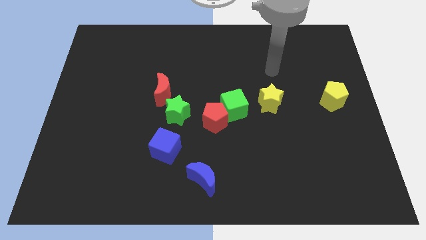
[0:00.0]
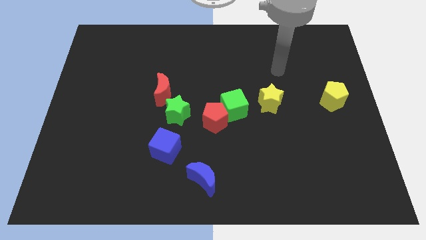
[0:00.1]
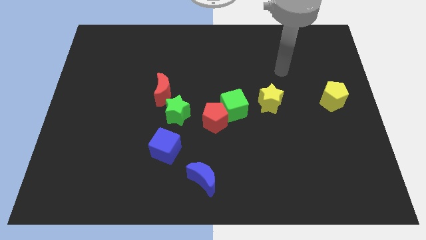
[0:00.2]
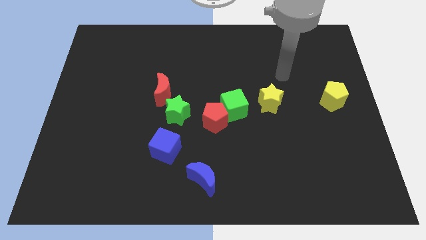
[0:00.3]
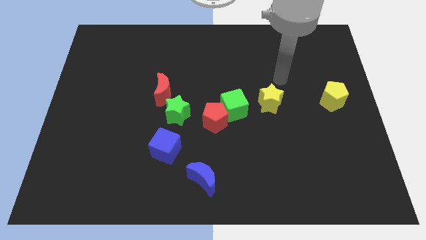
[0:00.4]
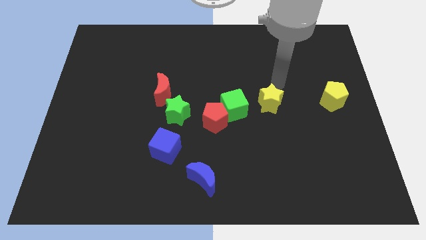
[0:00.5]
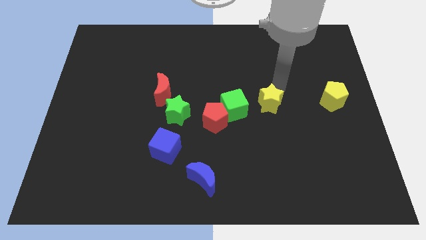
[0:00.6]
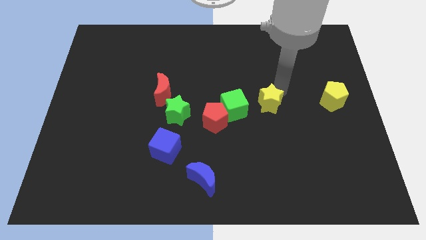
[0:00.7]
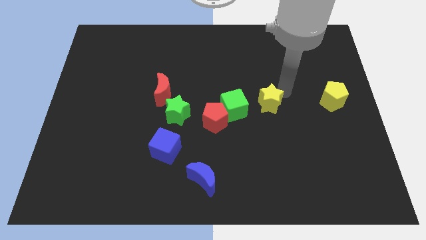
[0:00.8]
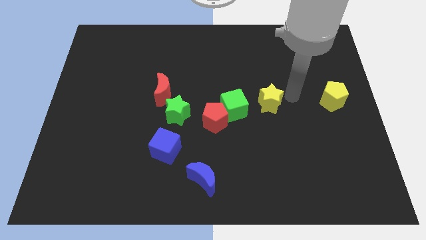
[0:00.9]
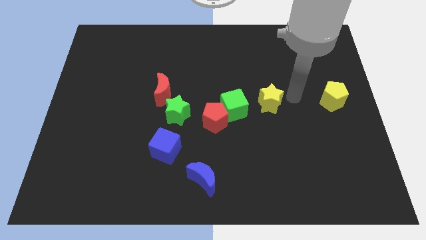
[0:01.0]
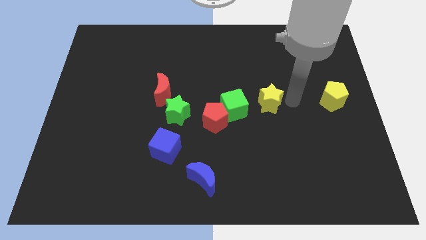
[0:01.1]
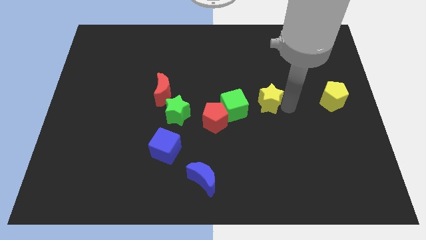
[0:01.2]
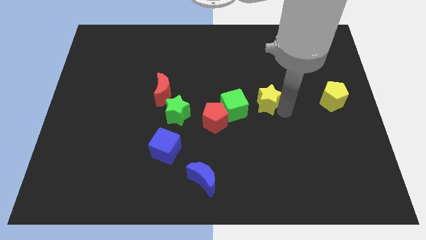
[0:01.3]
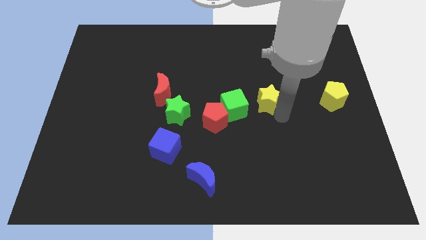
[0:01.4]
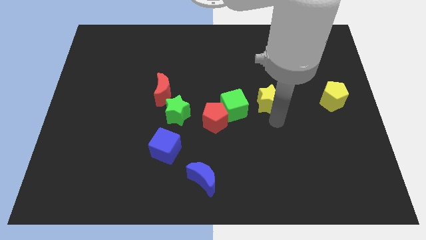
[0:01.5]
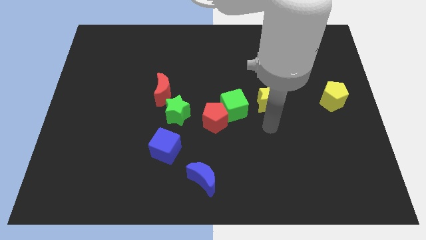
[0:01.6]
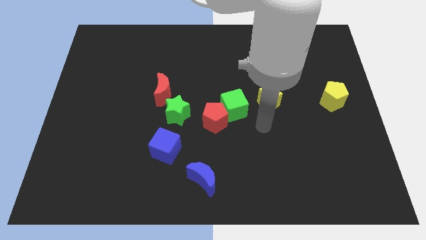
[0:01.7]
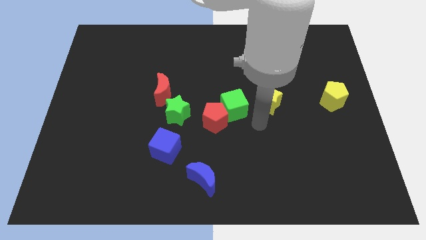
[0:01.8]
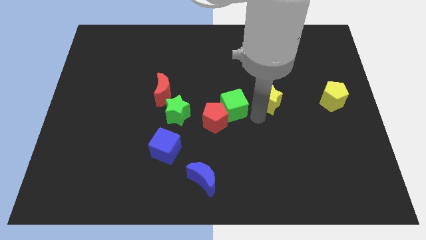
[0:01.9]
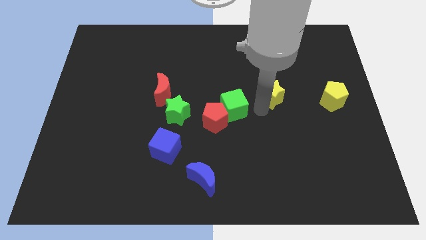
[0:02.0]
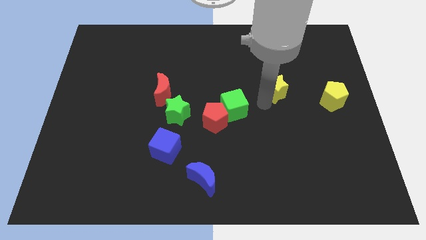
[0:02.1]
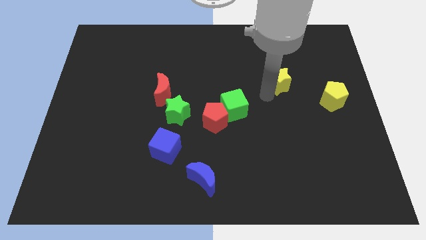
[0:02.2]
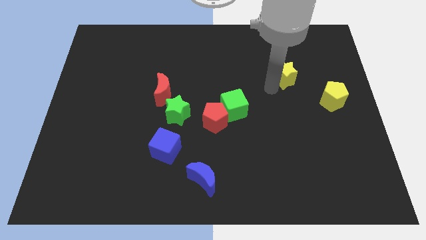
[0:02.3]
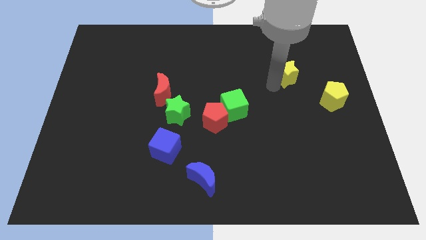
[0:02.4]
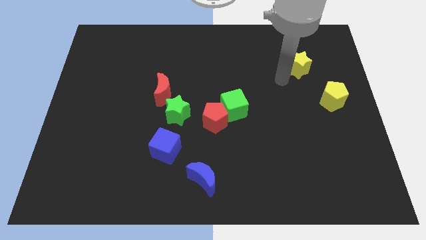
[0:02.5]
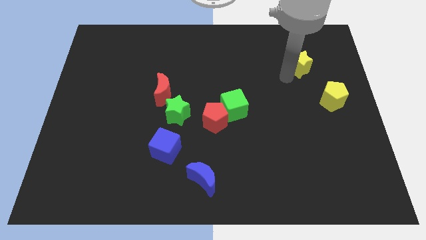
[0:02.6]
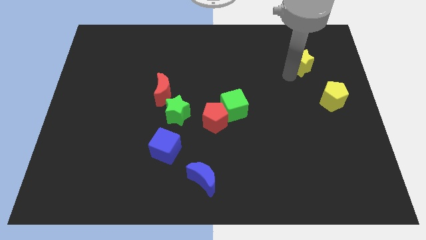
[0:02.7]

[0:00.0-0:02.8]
put the yellow star at the top left side of the yellow pentagon

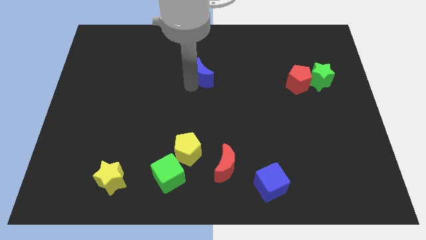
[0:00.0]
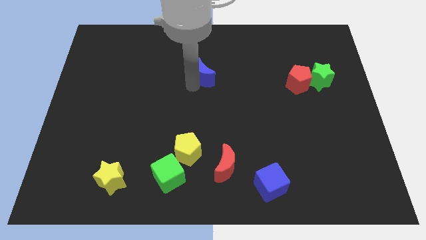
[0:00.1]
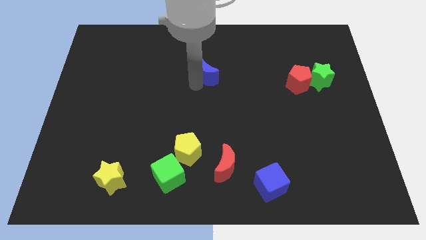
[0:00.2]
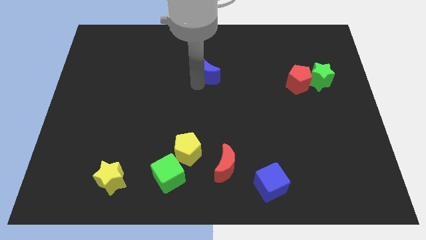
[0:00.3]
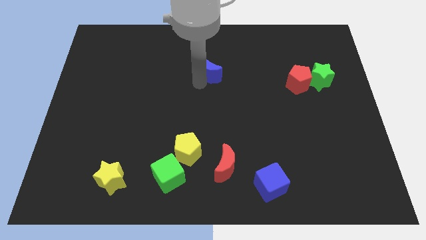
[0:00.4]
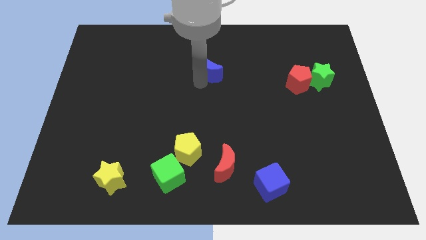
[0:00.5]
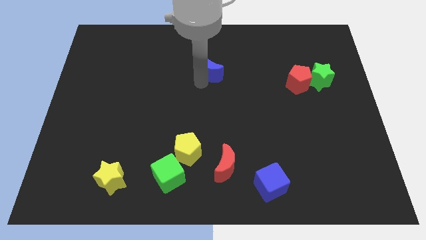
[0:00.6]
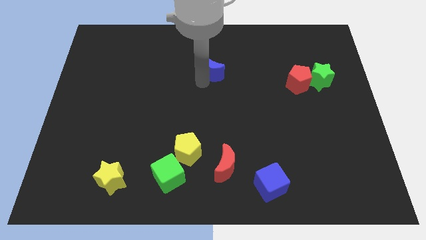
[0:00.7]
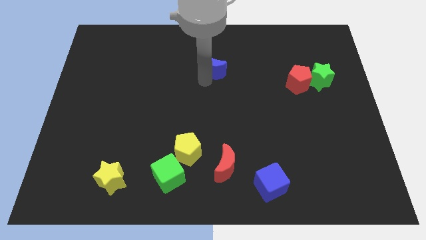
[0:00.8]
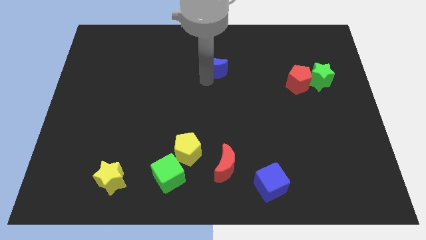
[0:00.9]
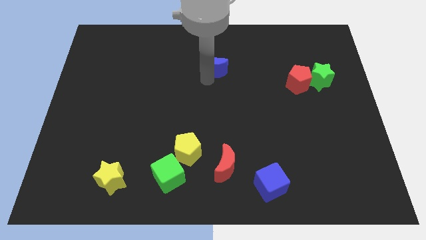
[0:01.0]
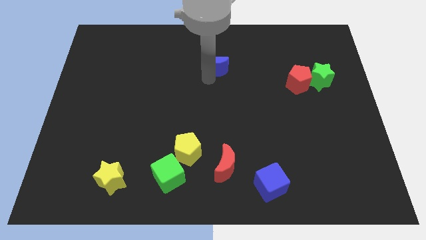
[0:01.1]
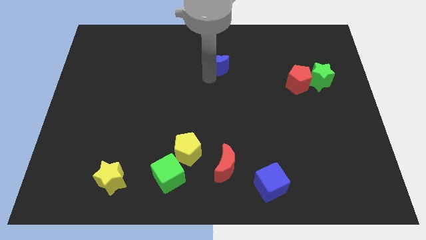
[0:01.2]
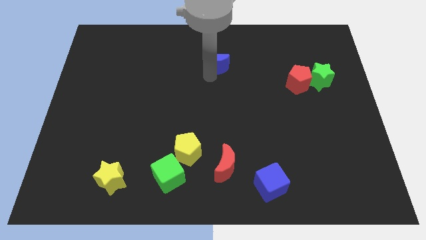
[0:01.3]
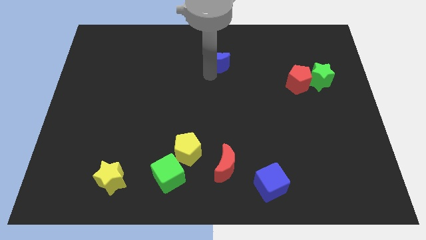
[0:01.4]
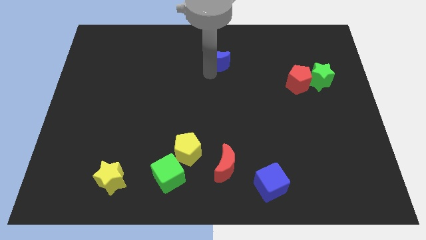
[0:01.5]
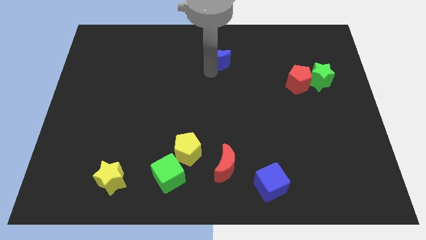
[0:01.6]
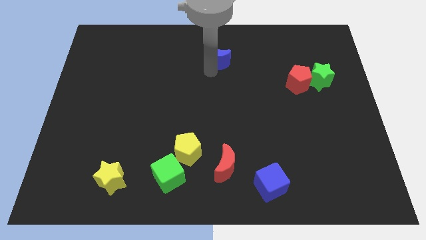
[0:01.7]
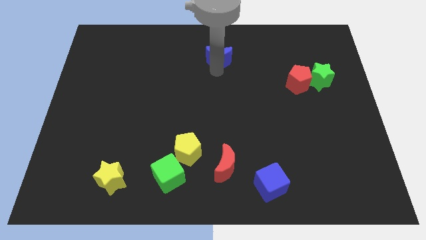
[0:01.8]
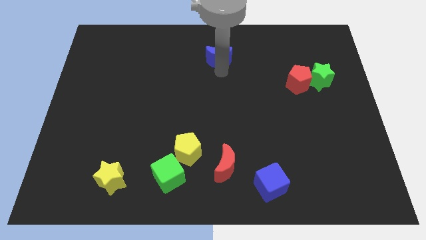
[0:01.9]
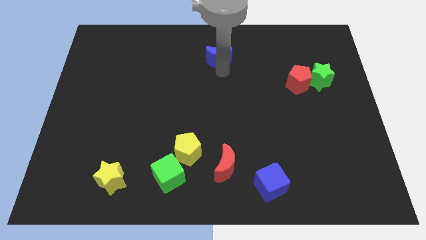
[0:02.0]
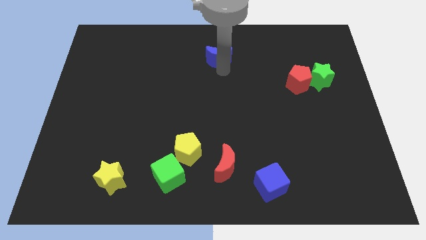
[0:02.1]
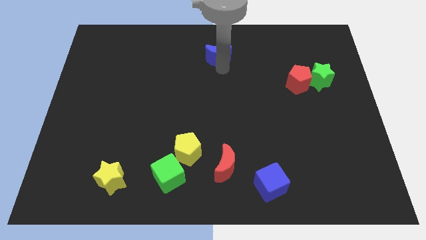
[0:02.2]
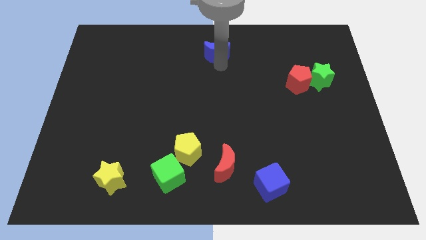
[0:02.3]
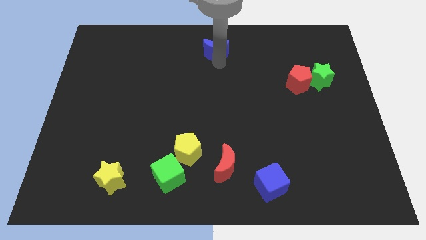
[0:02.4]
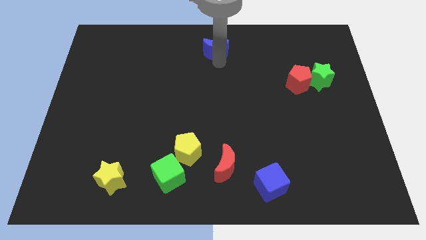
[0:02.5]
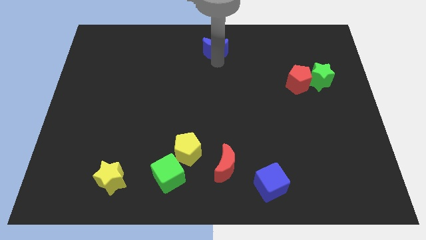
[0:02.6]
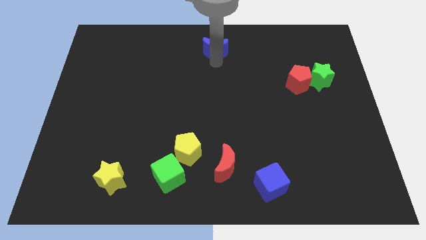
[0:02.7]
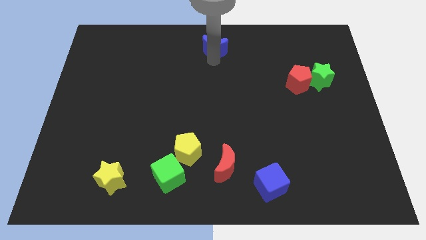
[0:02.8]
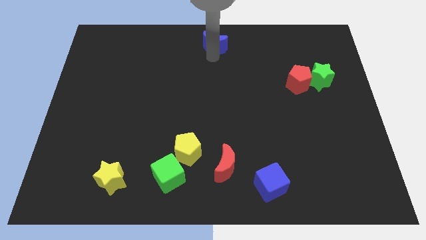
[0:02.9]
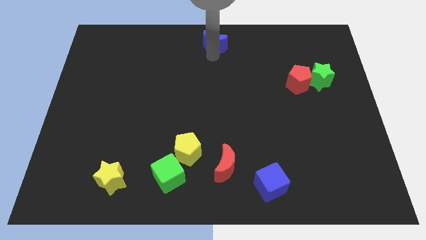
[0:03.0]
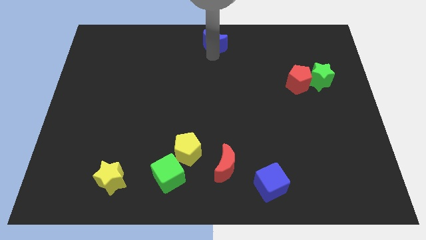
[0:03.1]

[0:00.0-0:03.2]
push the blue moon upward

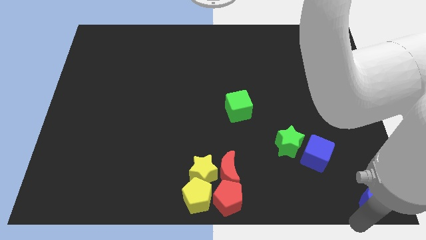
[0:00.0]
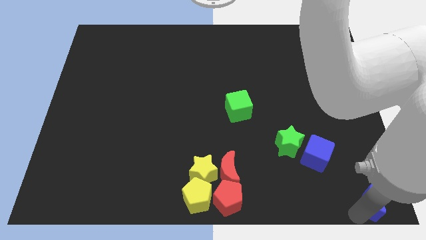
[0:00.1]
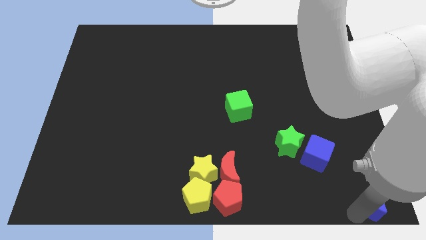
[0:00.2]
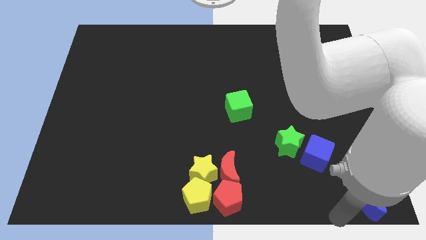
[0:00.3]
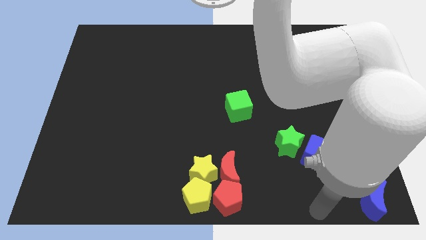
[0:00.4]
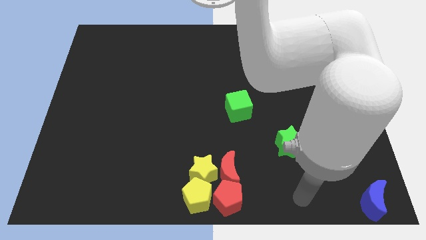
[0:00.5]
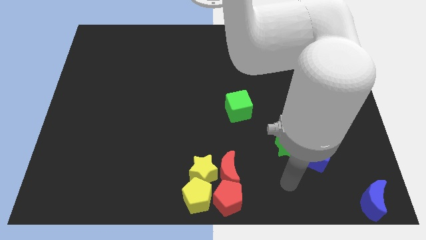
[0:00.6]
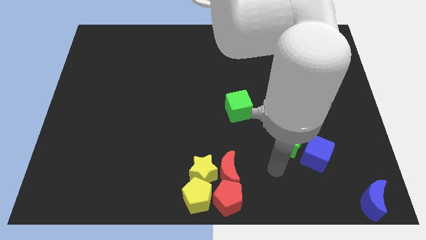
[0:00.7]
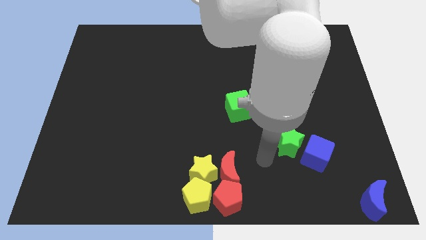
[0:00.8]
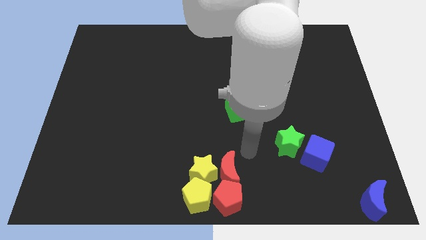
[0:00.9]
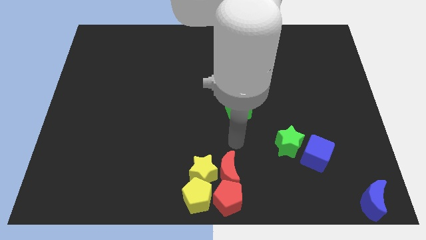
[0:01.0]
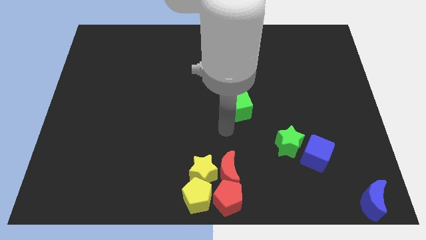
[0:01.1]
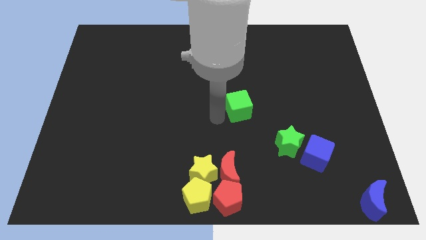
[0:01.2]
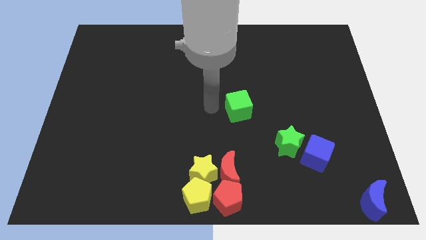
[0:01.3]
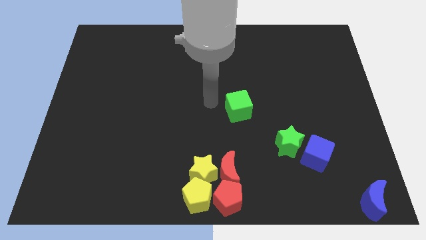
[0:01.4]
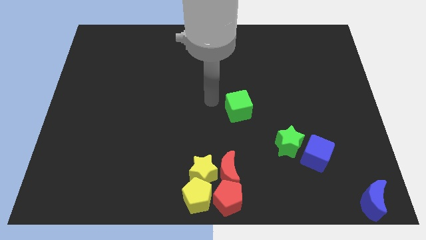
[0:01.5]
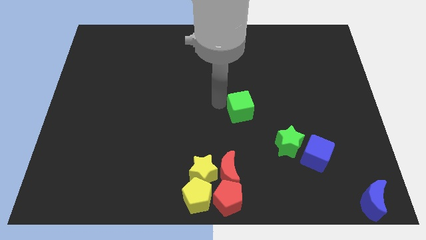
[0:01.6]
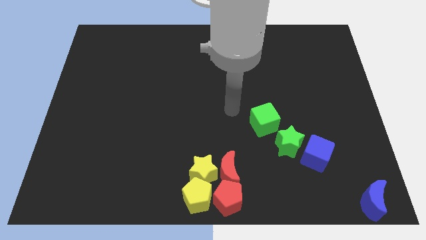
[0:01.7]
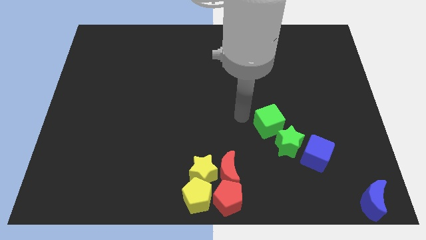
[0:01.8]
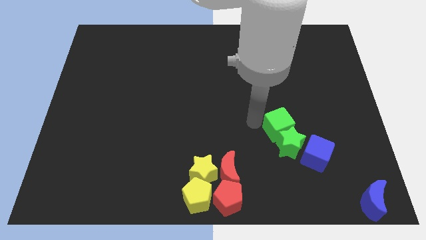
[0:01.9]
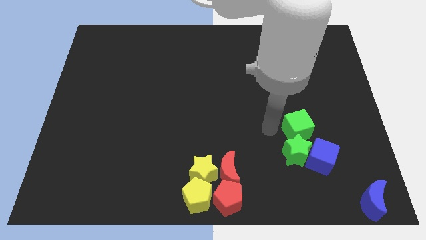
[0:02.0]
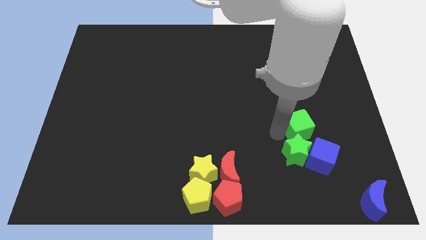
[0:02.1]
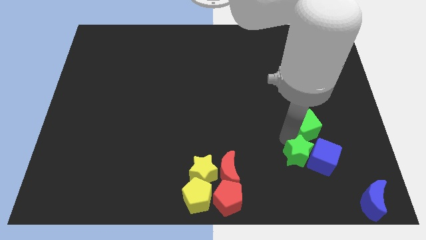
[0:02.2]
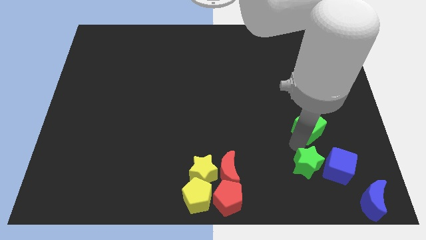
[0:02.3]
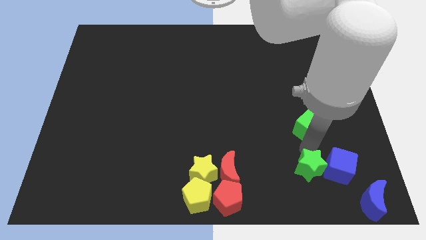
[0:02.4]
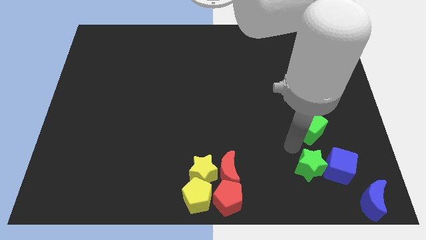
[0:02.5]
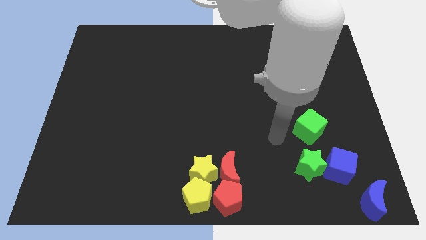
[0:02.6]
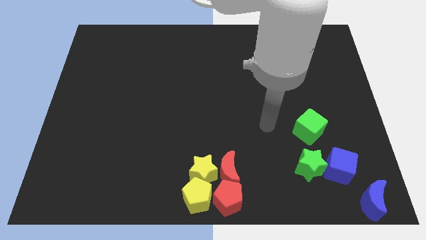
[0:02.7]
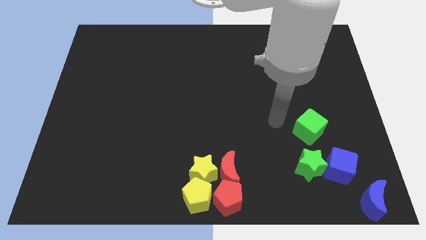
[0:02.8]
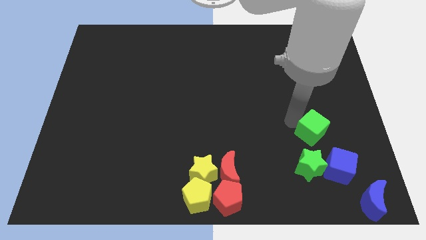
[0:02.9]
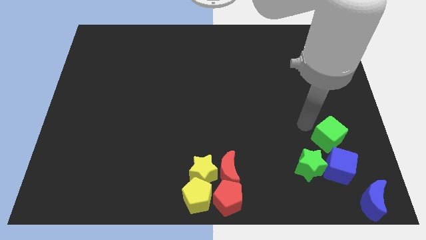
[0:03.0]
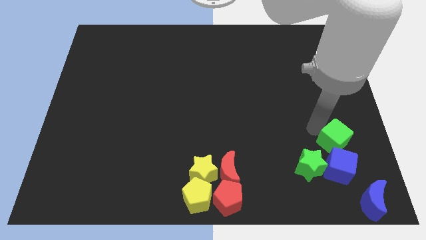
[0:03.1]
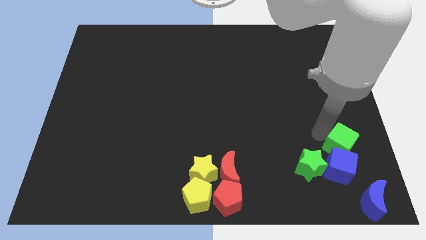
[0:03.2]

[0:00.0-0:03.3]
place green cube above blue cube
